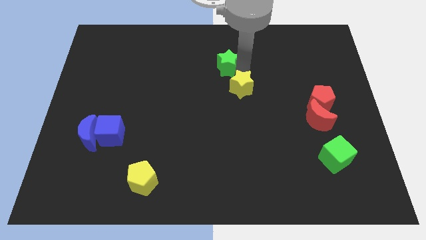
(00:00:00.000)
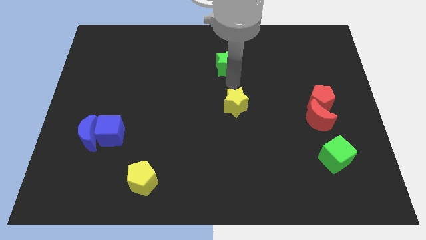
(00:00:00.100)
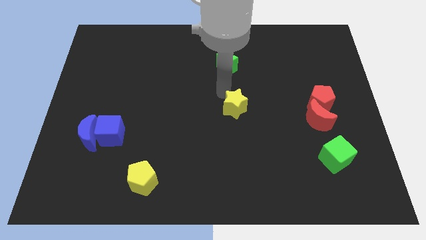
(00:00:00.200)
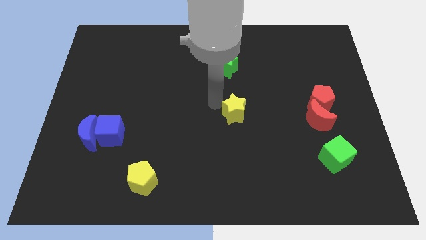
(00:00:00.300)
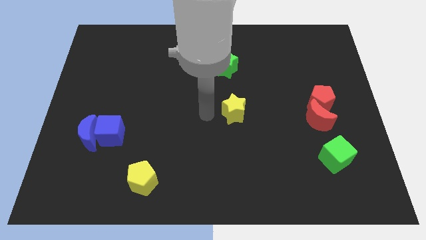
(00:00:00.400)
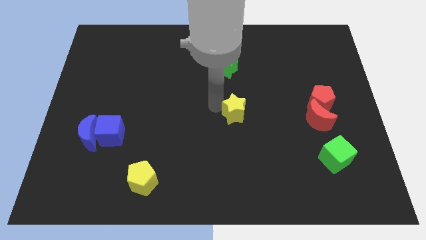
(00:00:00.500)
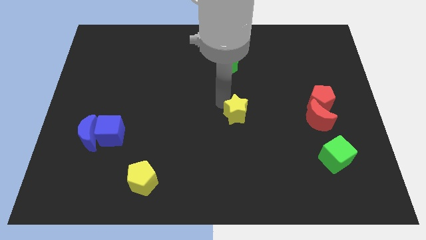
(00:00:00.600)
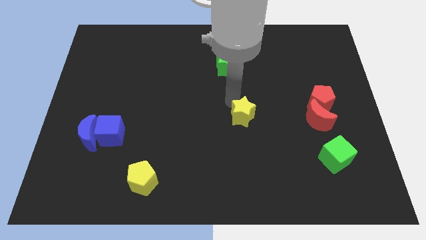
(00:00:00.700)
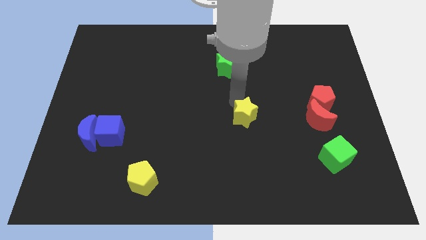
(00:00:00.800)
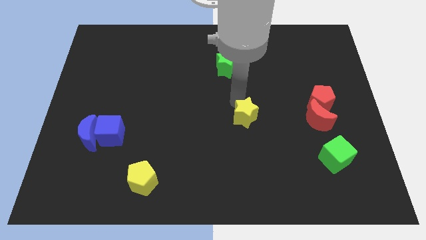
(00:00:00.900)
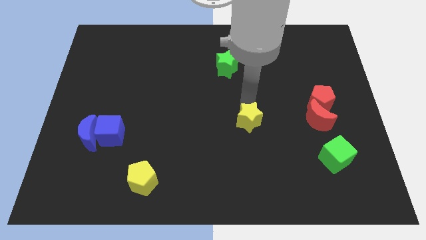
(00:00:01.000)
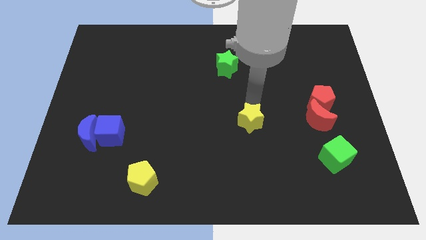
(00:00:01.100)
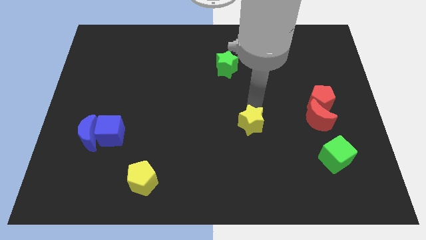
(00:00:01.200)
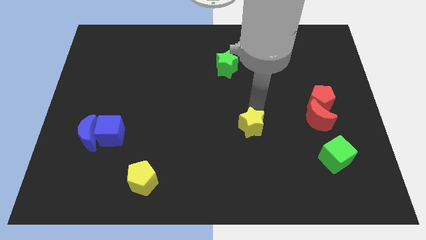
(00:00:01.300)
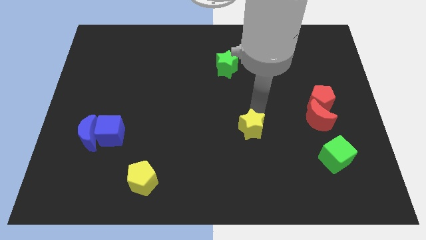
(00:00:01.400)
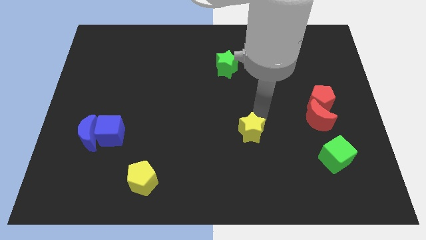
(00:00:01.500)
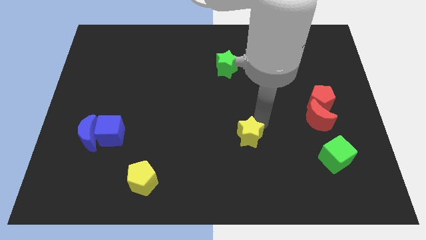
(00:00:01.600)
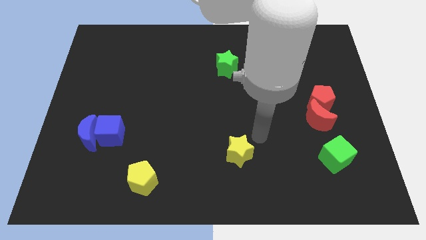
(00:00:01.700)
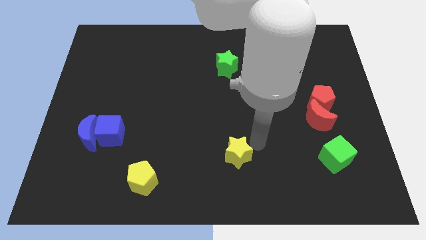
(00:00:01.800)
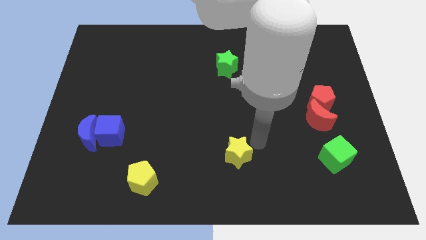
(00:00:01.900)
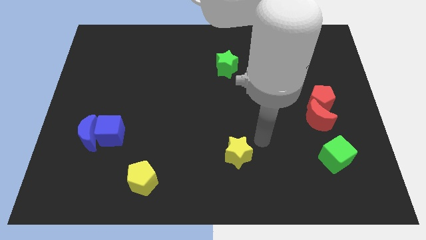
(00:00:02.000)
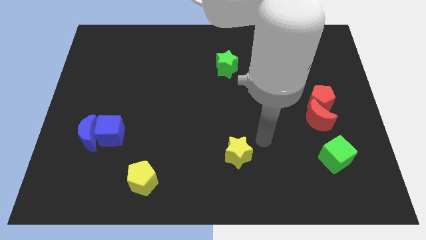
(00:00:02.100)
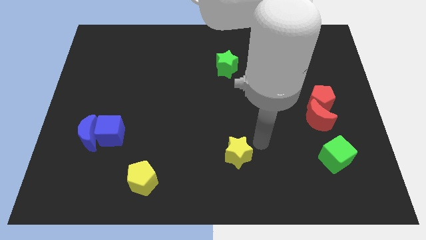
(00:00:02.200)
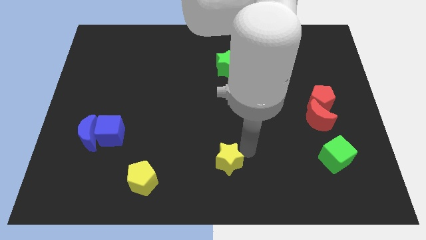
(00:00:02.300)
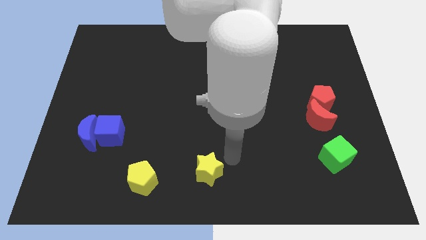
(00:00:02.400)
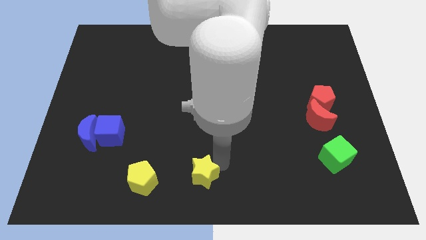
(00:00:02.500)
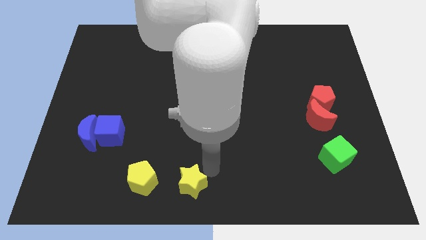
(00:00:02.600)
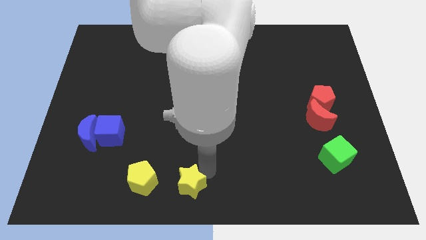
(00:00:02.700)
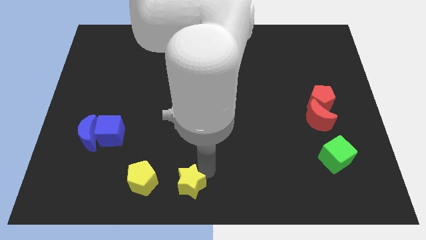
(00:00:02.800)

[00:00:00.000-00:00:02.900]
move the yellow star to the right of the yellow pentagon

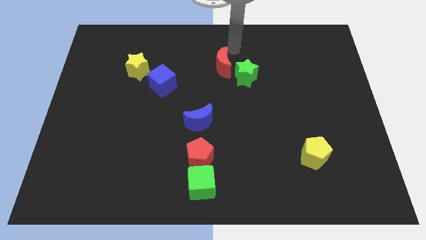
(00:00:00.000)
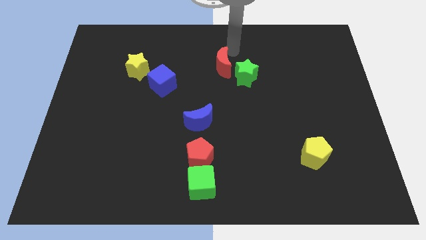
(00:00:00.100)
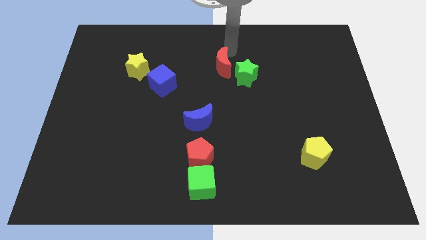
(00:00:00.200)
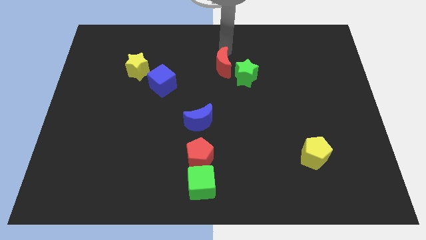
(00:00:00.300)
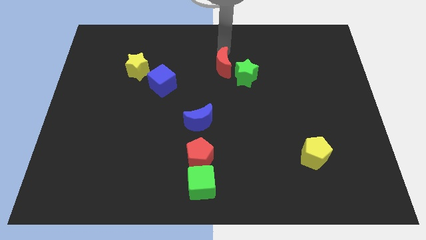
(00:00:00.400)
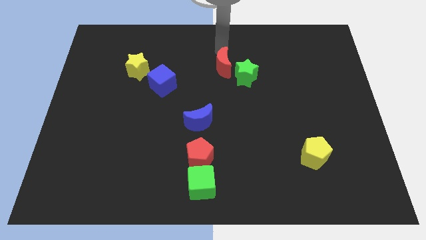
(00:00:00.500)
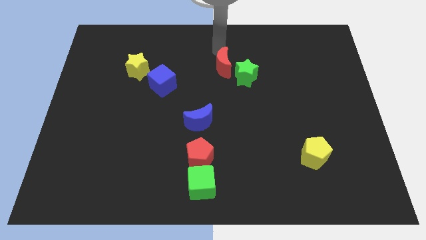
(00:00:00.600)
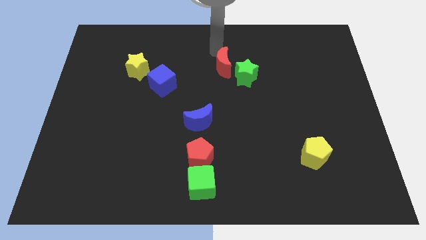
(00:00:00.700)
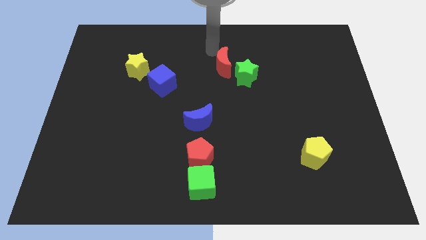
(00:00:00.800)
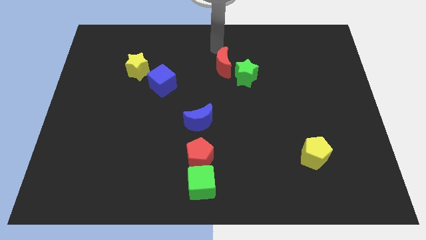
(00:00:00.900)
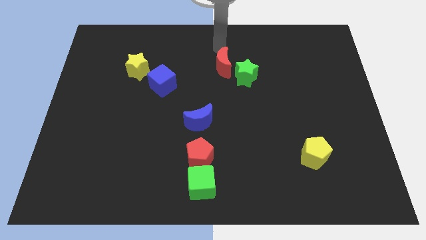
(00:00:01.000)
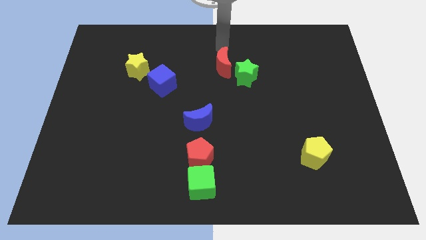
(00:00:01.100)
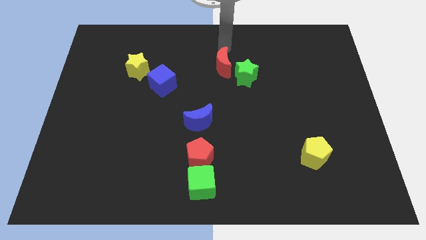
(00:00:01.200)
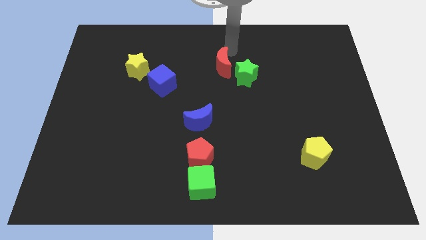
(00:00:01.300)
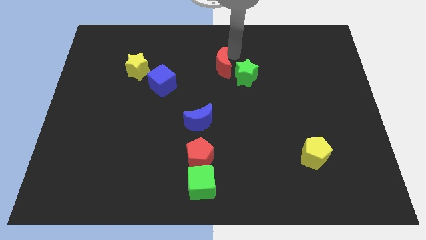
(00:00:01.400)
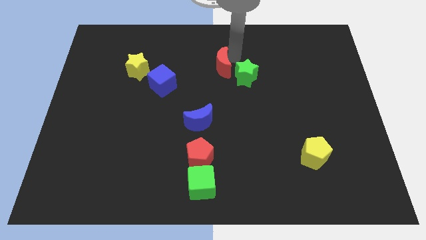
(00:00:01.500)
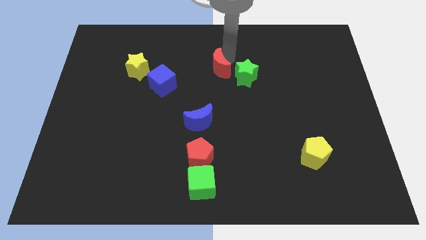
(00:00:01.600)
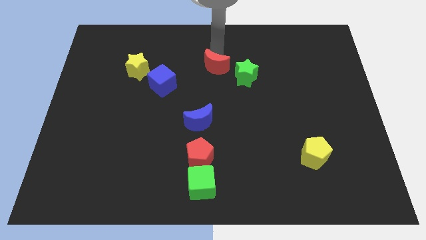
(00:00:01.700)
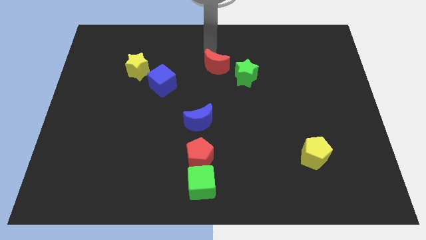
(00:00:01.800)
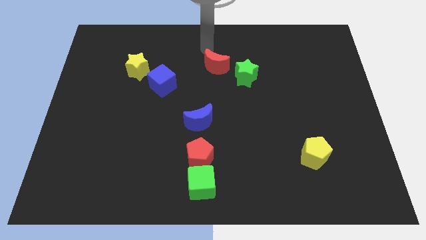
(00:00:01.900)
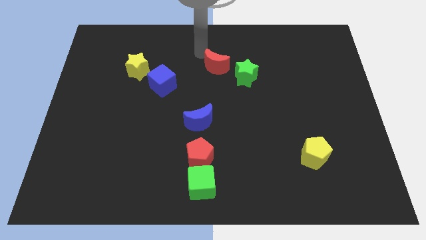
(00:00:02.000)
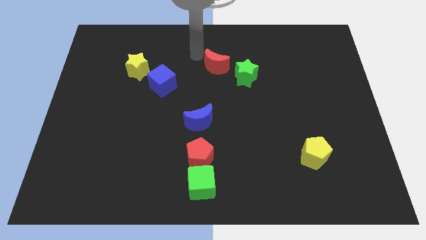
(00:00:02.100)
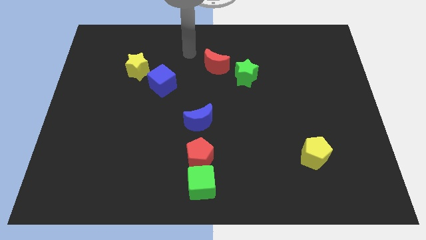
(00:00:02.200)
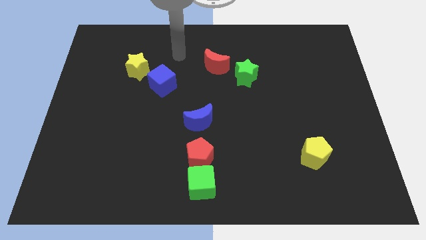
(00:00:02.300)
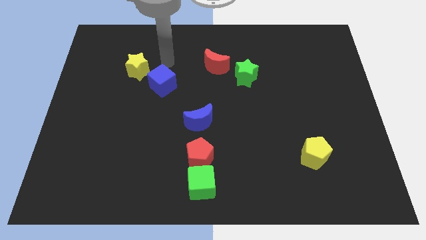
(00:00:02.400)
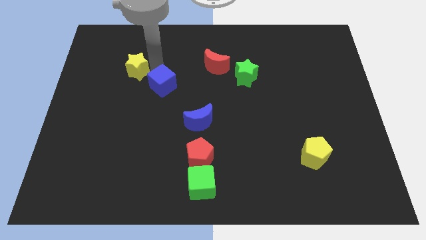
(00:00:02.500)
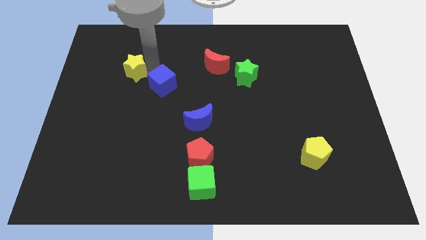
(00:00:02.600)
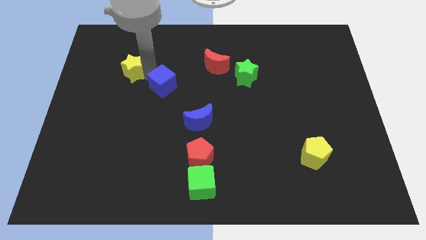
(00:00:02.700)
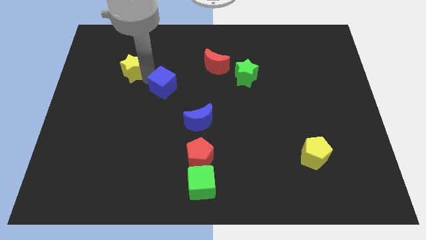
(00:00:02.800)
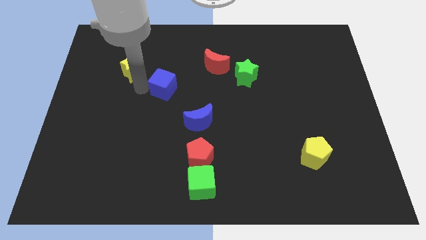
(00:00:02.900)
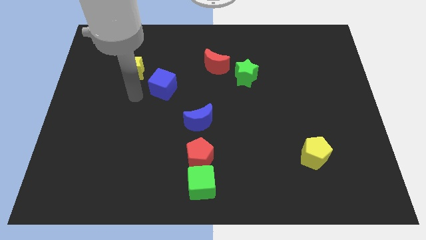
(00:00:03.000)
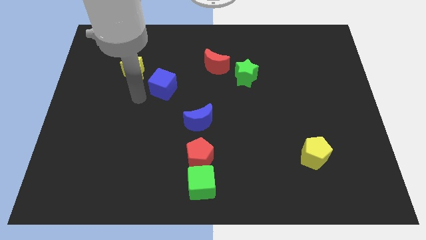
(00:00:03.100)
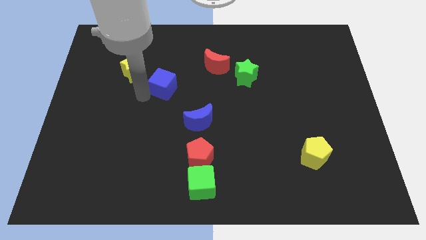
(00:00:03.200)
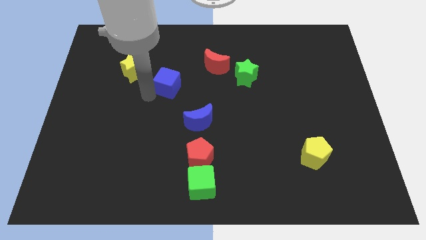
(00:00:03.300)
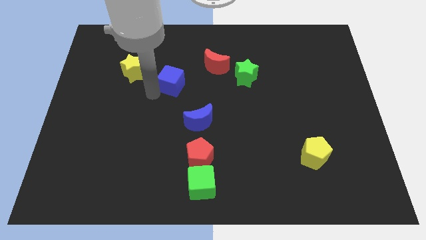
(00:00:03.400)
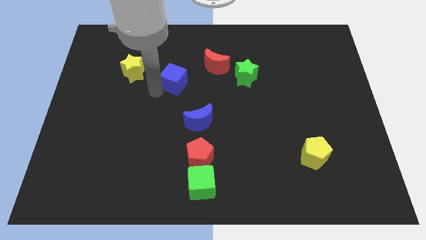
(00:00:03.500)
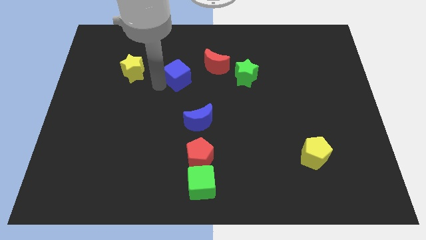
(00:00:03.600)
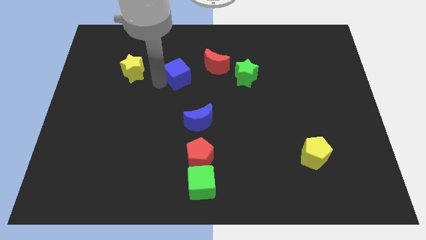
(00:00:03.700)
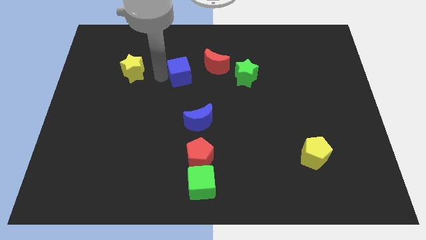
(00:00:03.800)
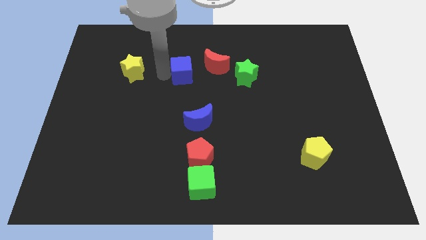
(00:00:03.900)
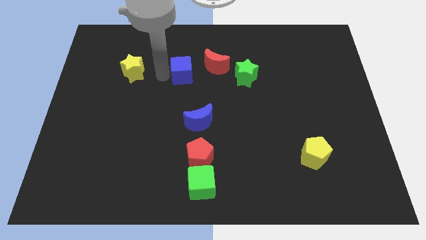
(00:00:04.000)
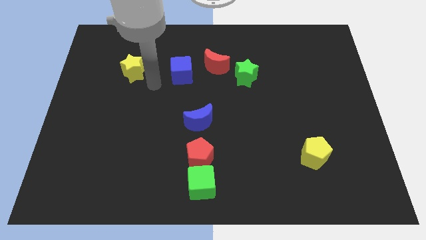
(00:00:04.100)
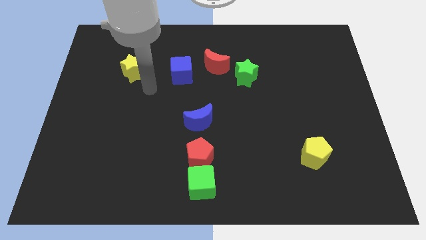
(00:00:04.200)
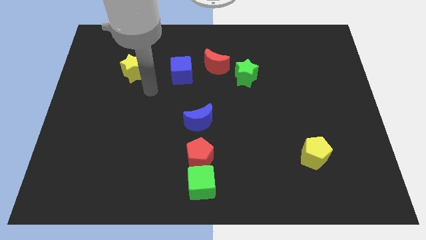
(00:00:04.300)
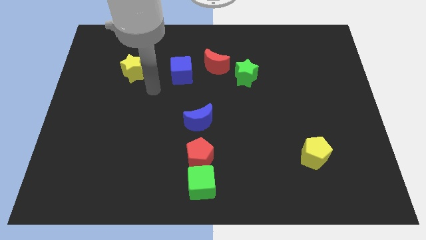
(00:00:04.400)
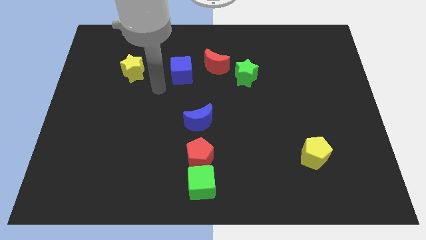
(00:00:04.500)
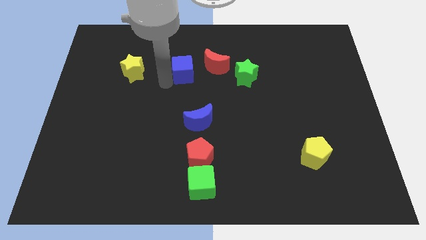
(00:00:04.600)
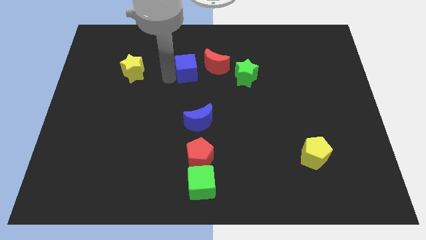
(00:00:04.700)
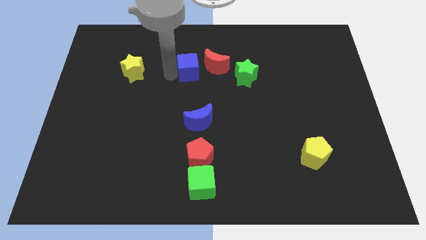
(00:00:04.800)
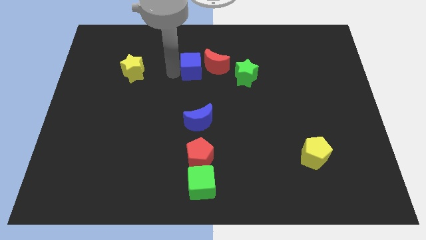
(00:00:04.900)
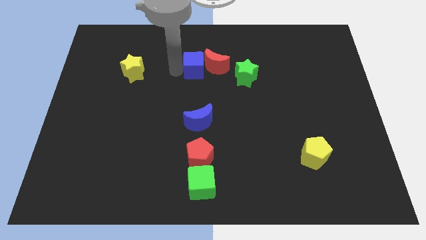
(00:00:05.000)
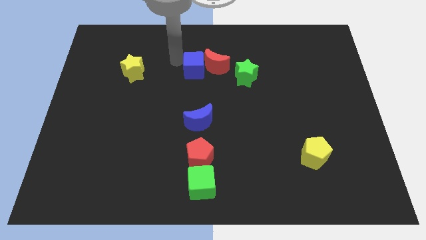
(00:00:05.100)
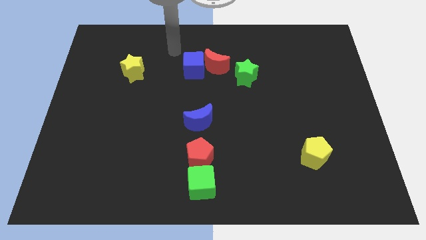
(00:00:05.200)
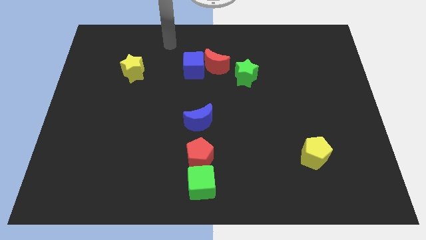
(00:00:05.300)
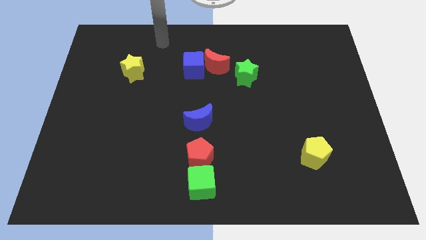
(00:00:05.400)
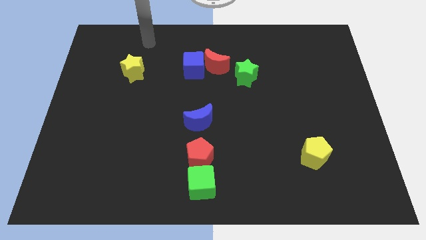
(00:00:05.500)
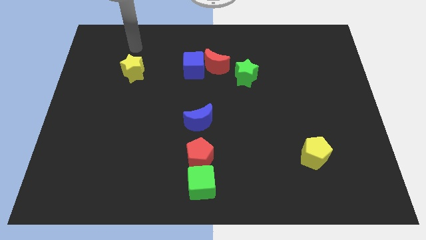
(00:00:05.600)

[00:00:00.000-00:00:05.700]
push the blue cube towards the left to the red crescent

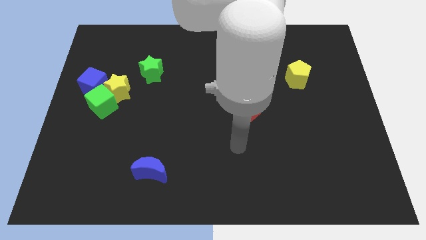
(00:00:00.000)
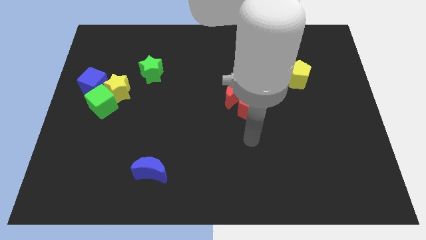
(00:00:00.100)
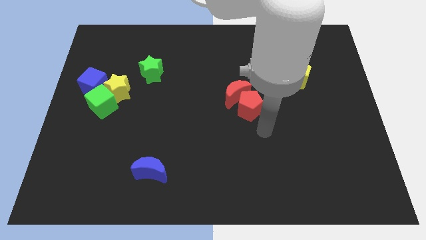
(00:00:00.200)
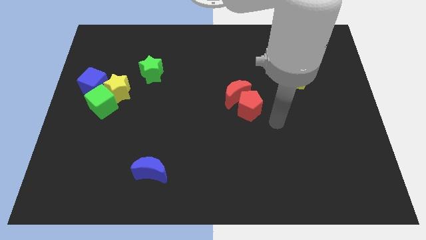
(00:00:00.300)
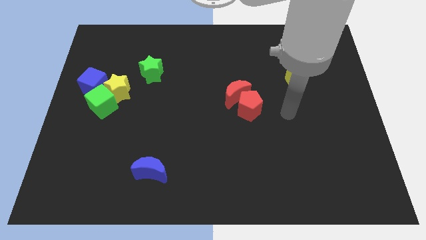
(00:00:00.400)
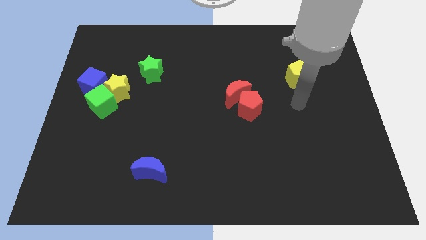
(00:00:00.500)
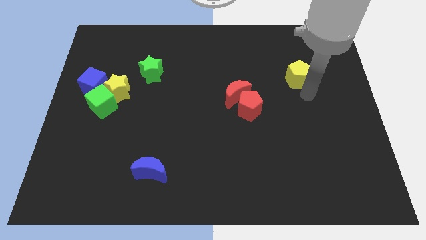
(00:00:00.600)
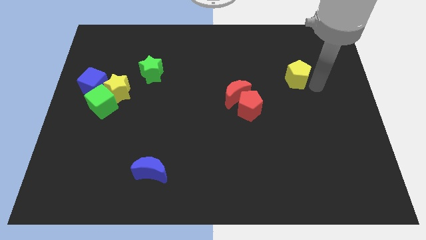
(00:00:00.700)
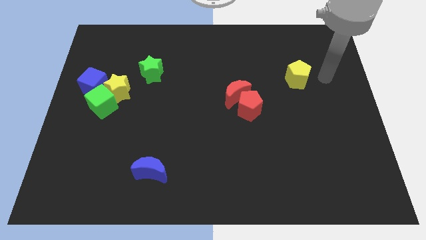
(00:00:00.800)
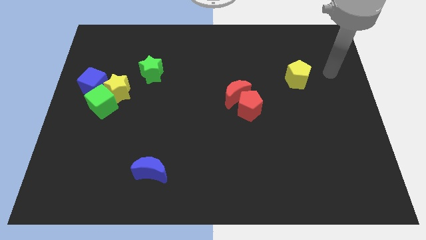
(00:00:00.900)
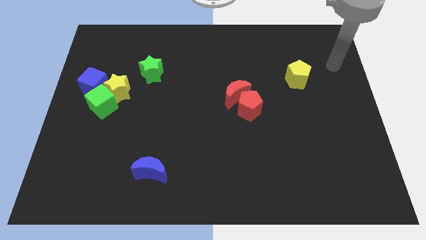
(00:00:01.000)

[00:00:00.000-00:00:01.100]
place your hand to the right of yellow pentagon
